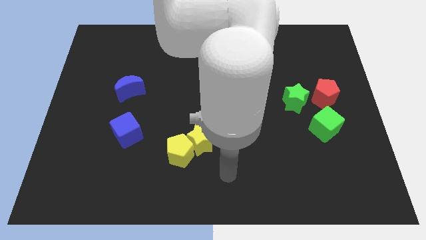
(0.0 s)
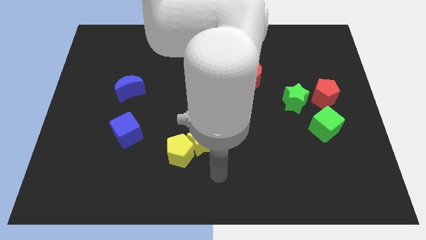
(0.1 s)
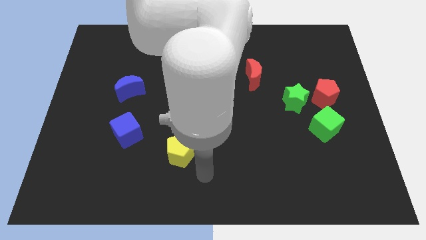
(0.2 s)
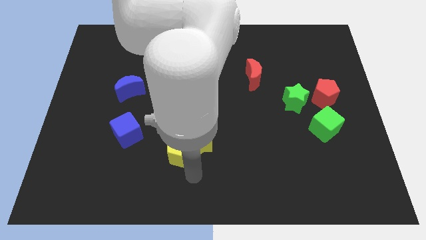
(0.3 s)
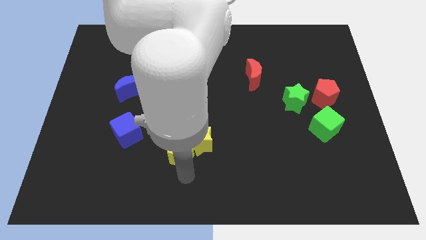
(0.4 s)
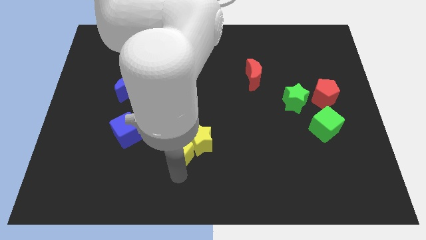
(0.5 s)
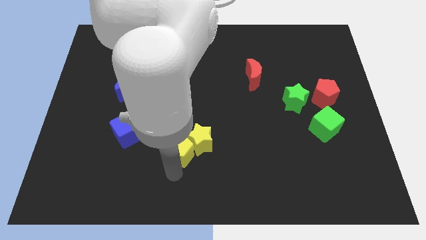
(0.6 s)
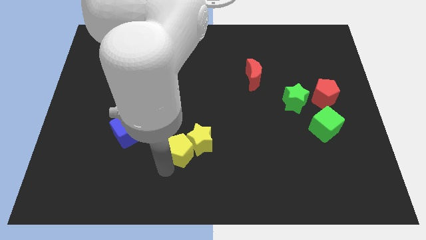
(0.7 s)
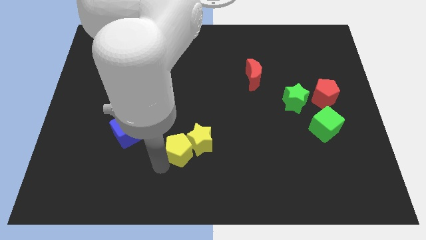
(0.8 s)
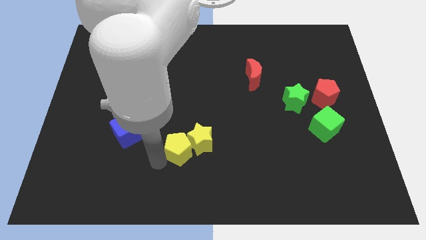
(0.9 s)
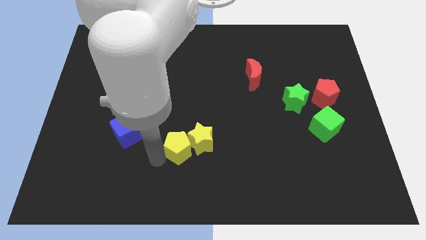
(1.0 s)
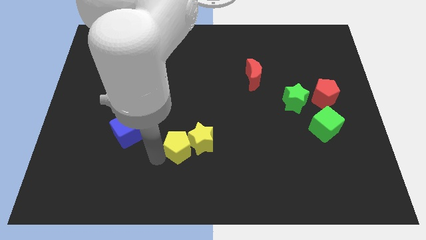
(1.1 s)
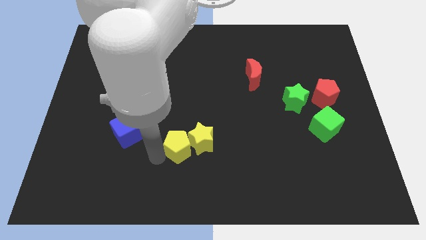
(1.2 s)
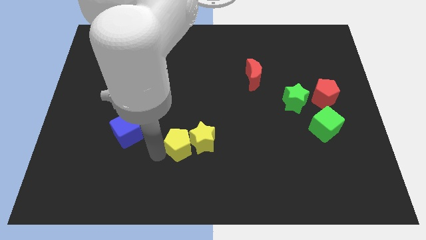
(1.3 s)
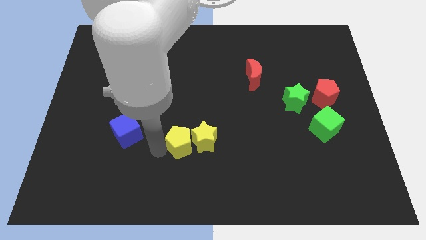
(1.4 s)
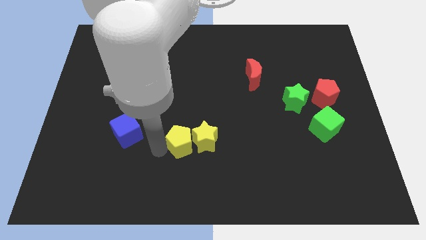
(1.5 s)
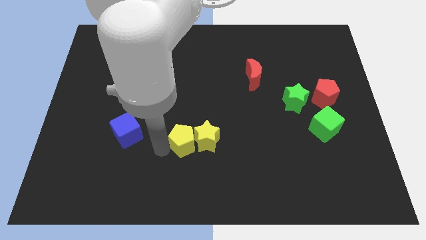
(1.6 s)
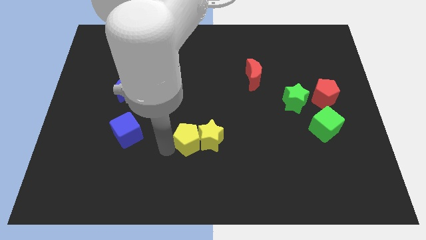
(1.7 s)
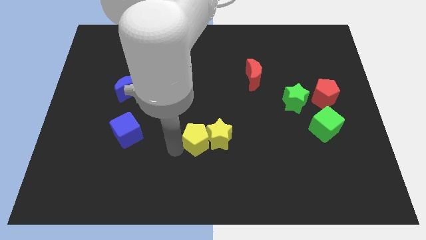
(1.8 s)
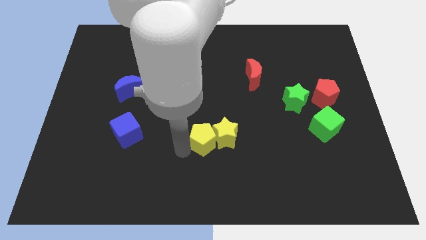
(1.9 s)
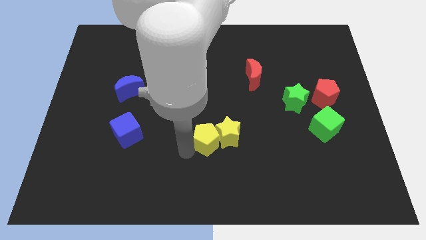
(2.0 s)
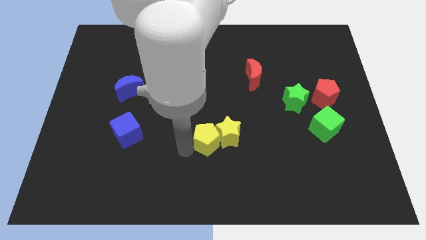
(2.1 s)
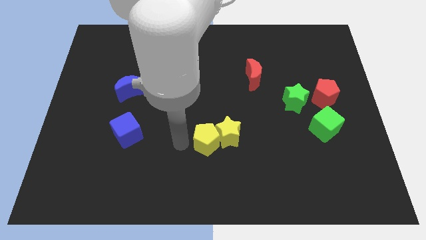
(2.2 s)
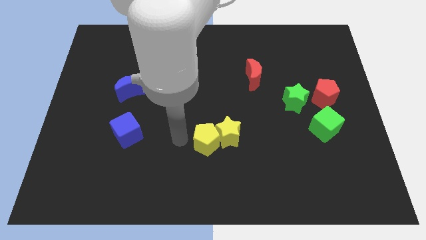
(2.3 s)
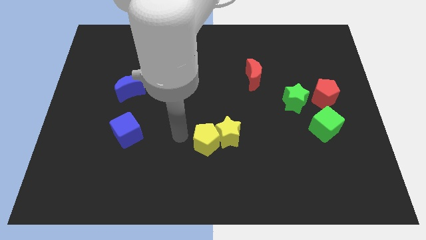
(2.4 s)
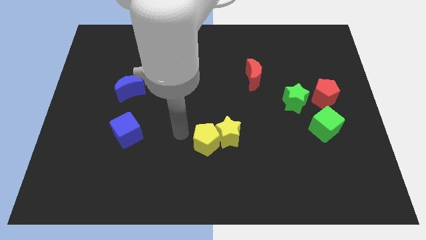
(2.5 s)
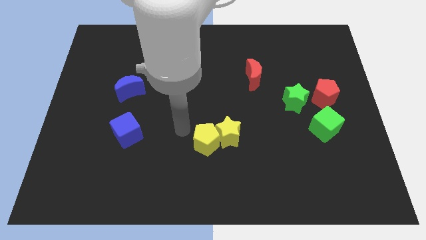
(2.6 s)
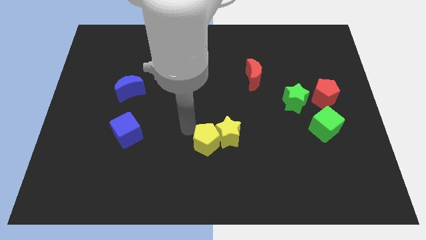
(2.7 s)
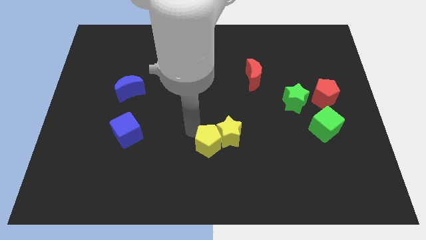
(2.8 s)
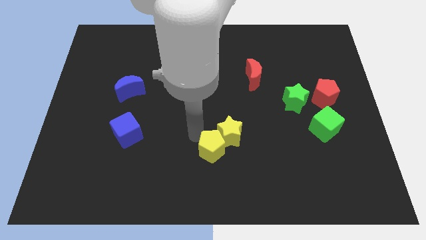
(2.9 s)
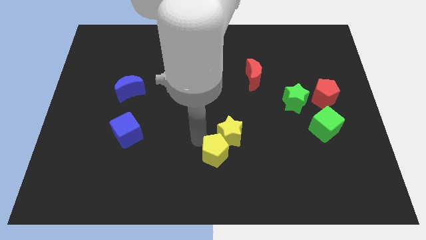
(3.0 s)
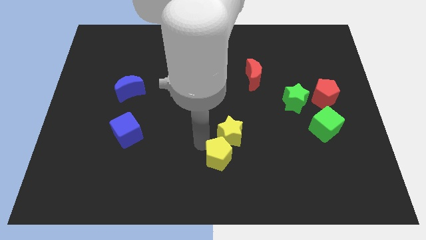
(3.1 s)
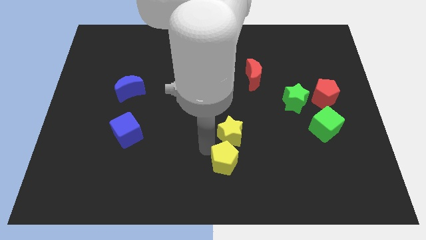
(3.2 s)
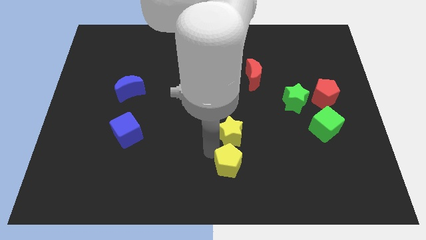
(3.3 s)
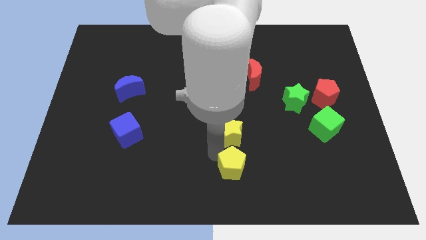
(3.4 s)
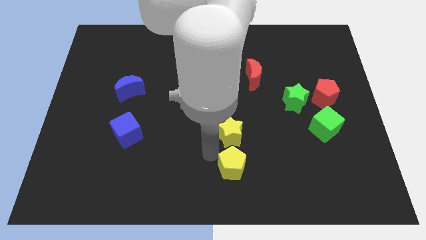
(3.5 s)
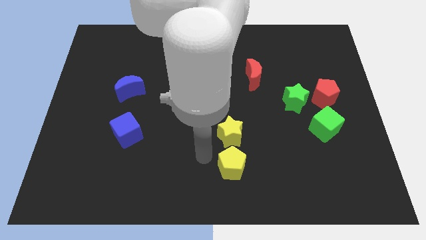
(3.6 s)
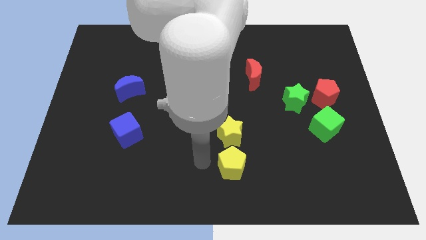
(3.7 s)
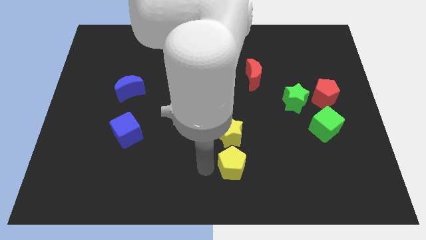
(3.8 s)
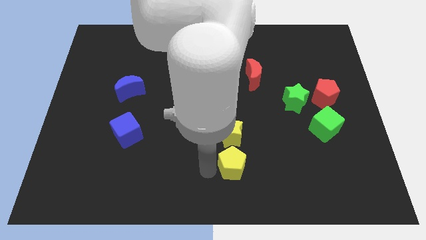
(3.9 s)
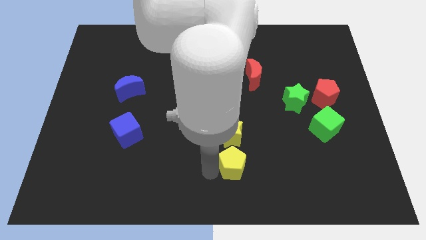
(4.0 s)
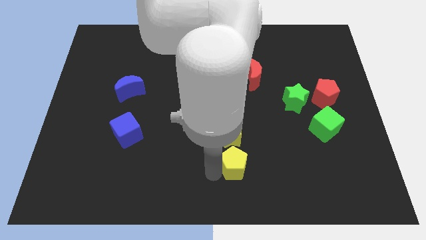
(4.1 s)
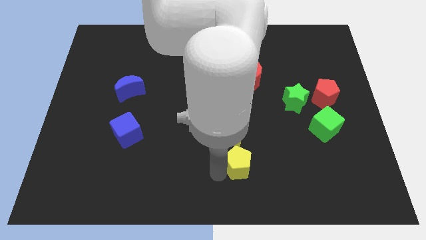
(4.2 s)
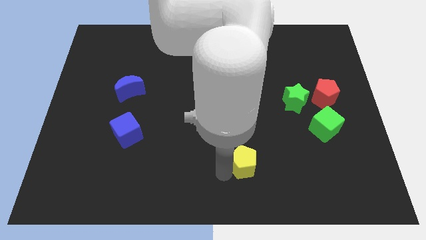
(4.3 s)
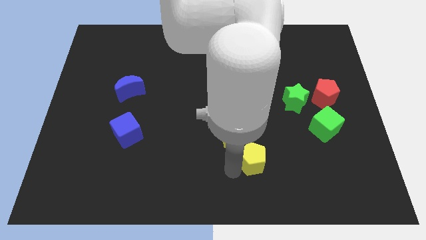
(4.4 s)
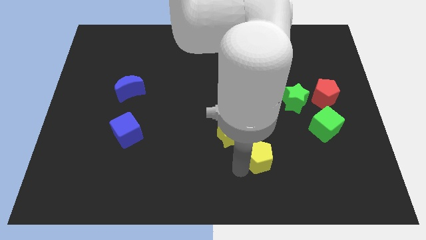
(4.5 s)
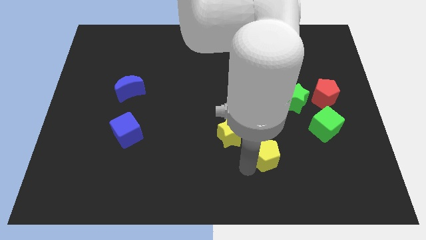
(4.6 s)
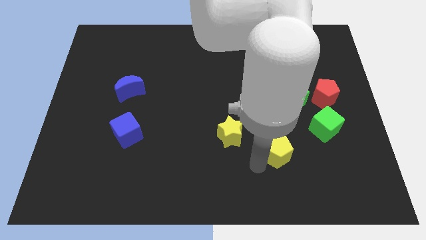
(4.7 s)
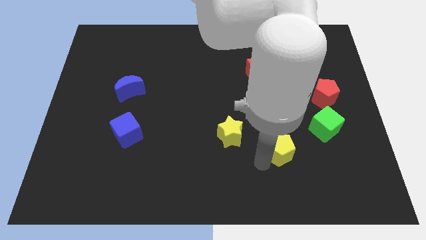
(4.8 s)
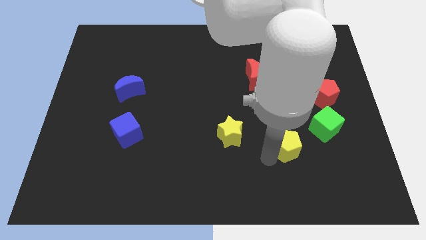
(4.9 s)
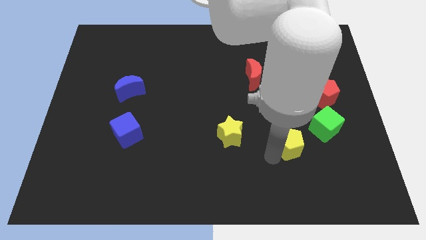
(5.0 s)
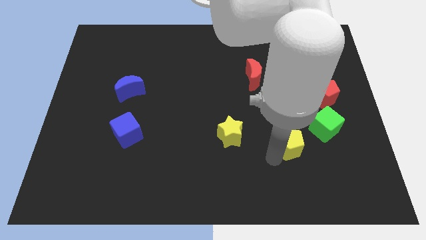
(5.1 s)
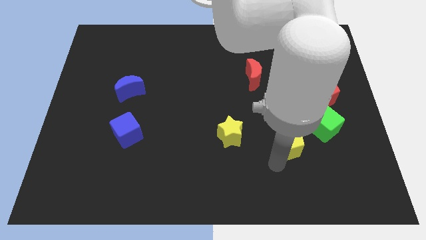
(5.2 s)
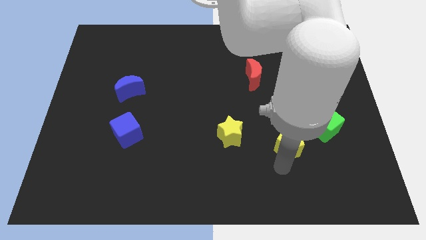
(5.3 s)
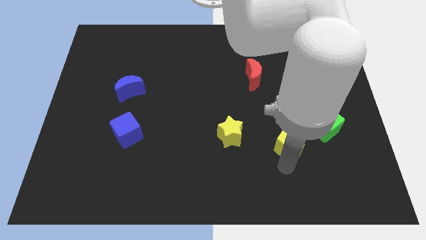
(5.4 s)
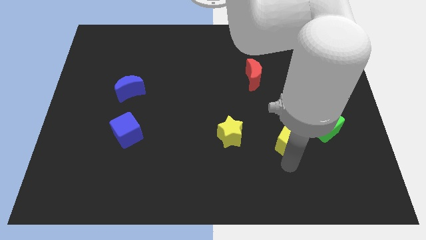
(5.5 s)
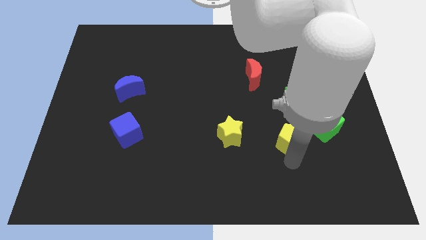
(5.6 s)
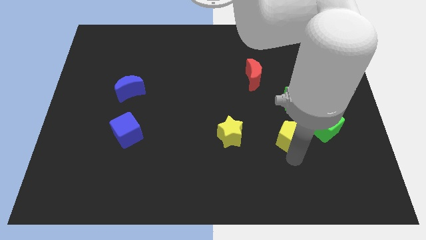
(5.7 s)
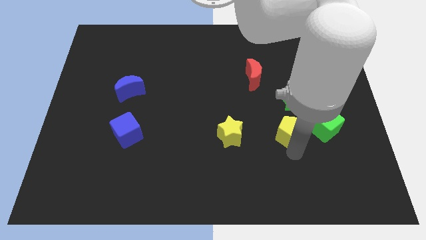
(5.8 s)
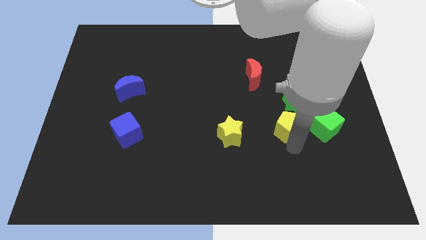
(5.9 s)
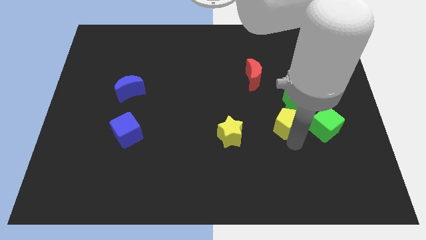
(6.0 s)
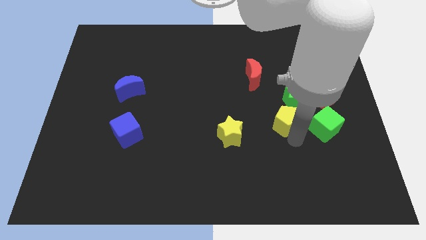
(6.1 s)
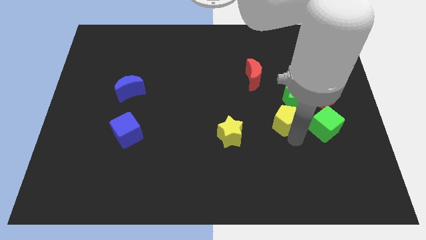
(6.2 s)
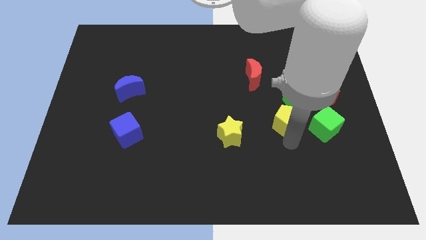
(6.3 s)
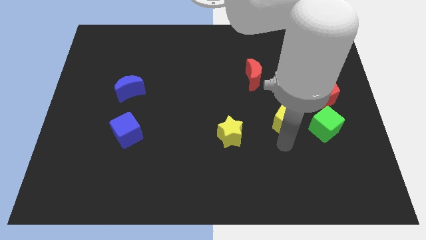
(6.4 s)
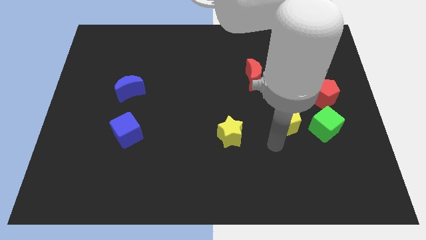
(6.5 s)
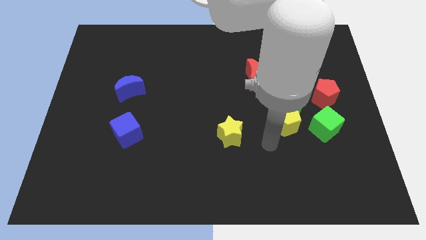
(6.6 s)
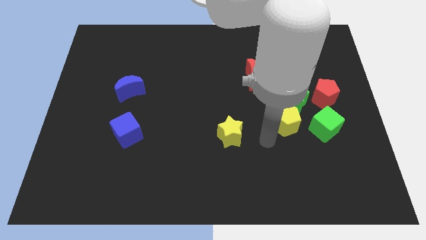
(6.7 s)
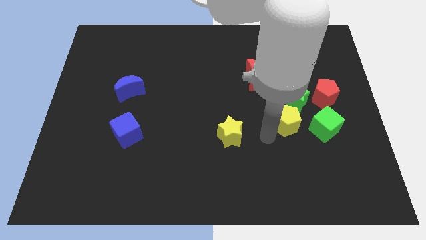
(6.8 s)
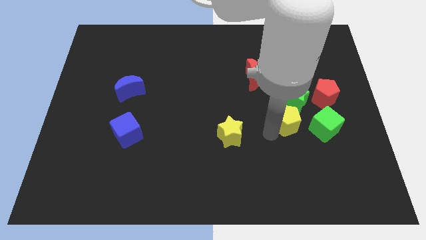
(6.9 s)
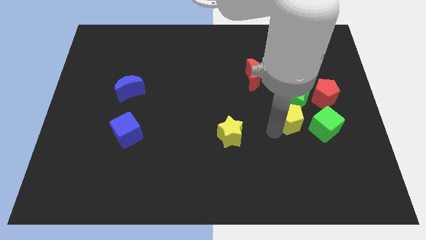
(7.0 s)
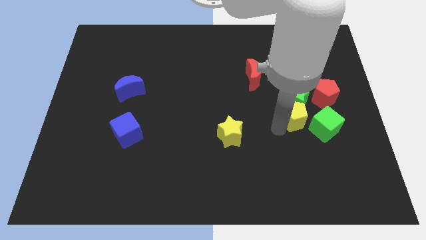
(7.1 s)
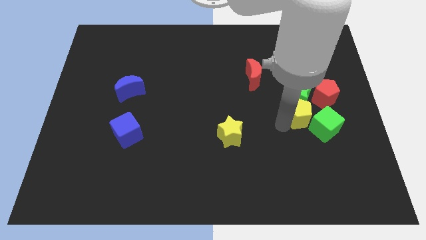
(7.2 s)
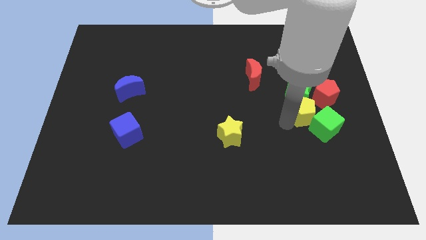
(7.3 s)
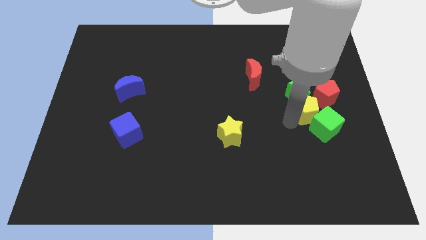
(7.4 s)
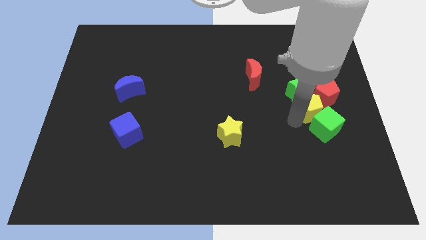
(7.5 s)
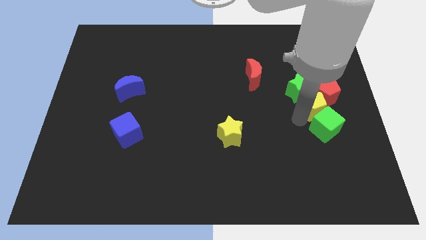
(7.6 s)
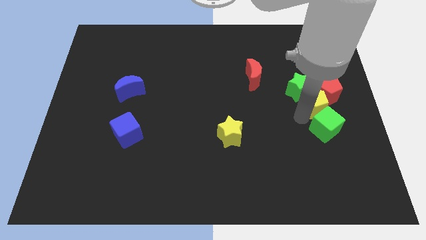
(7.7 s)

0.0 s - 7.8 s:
push the yellow pentagon next to the red pentagon
